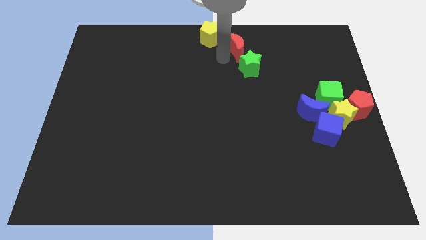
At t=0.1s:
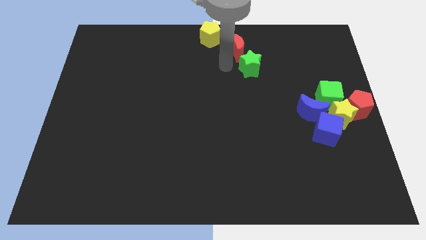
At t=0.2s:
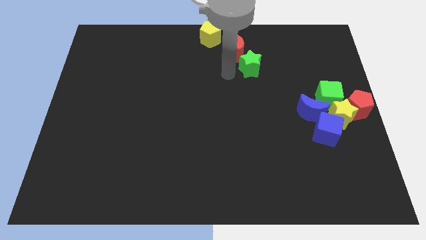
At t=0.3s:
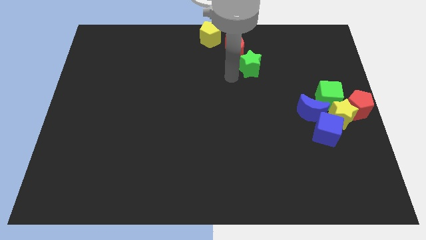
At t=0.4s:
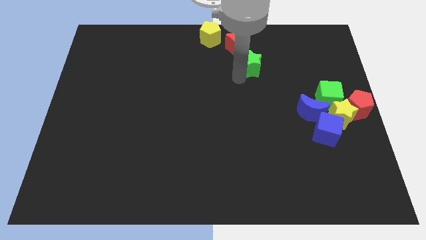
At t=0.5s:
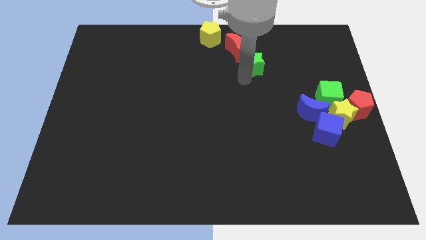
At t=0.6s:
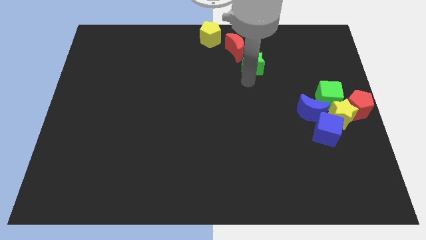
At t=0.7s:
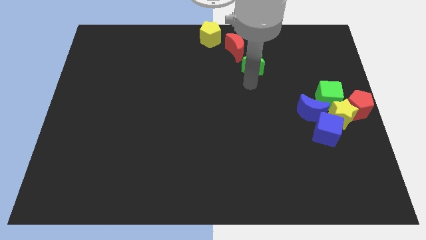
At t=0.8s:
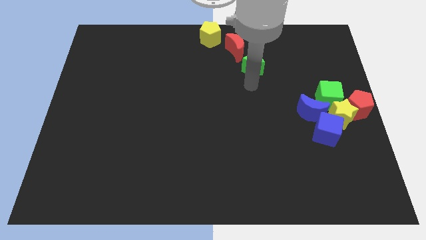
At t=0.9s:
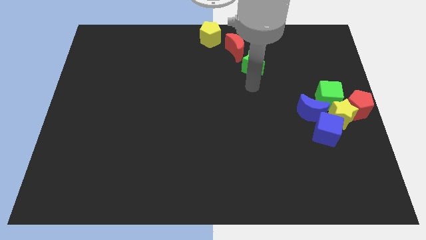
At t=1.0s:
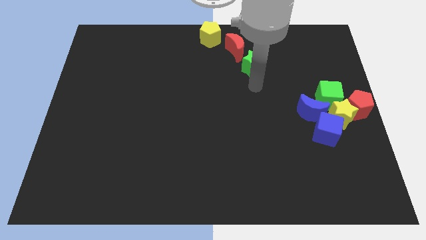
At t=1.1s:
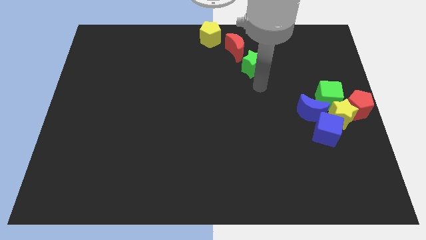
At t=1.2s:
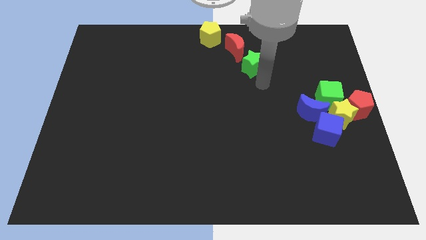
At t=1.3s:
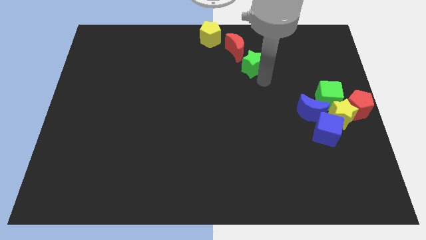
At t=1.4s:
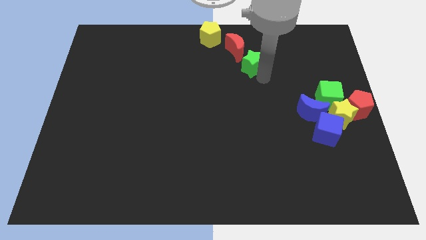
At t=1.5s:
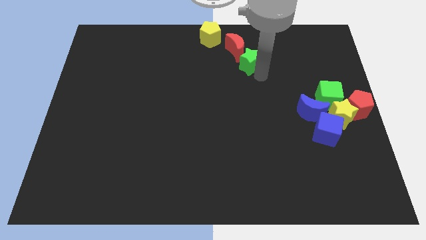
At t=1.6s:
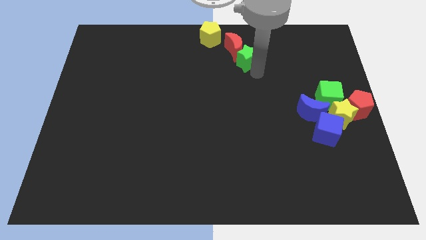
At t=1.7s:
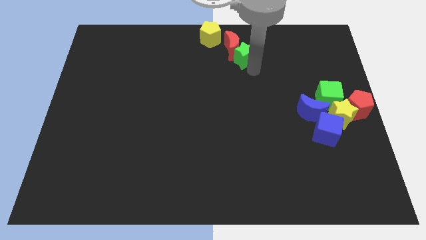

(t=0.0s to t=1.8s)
place the arm below the green star

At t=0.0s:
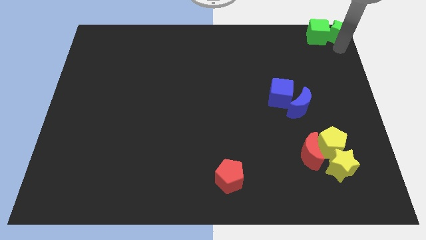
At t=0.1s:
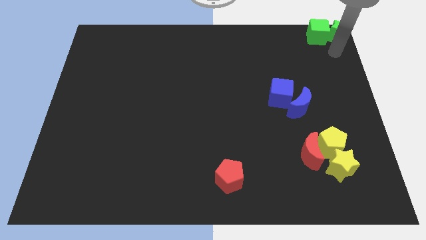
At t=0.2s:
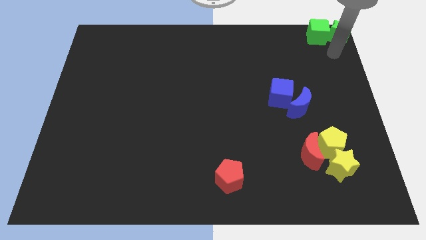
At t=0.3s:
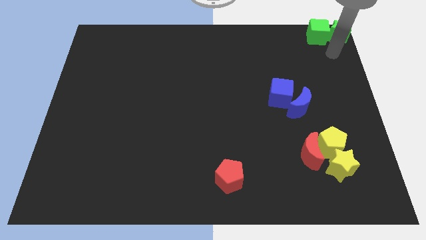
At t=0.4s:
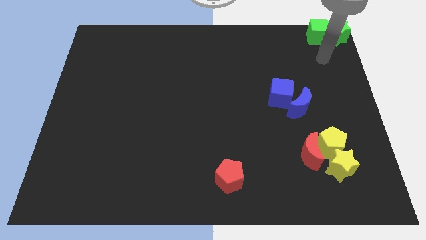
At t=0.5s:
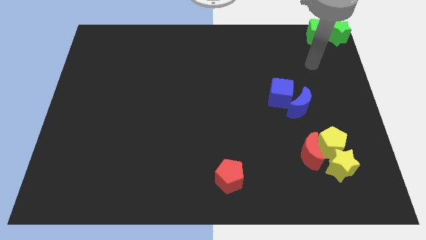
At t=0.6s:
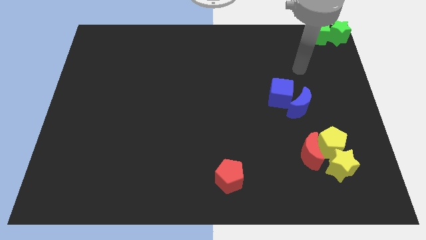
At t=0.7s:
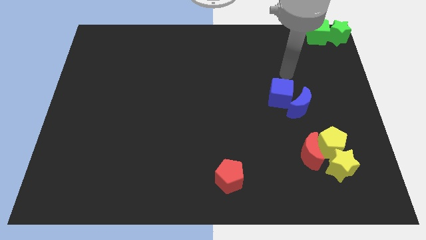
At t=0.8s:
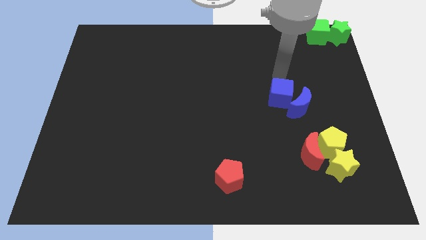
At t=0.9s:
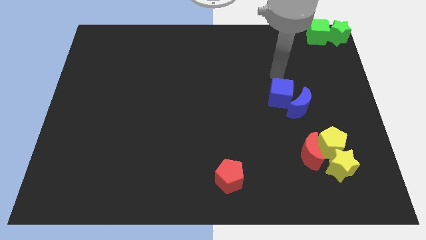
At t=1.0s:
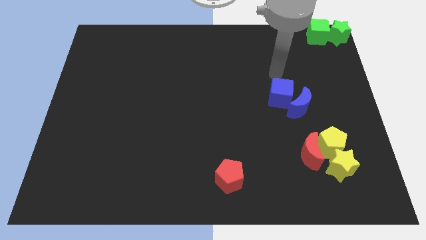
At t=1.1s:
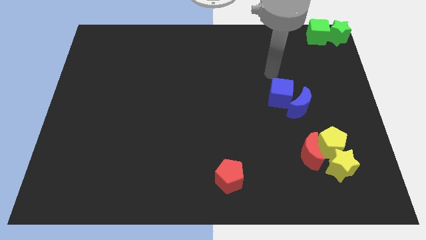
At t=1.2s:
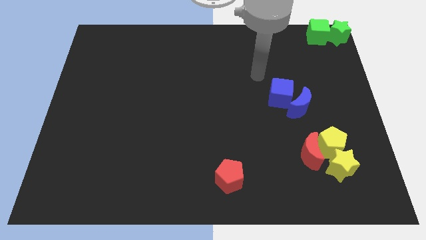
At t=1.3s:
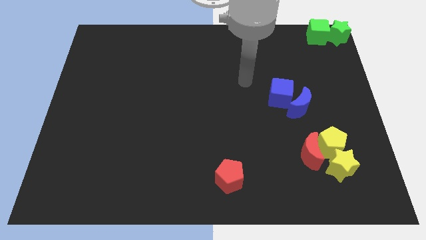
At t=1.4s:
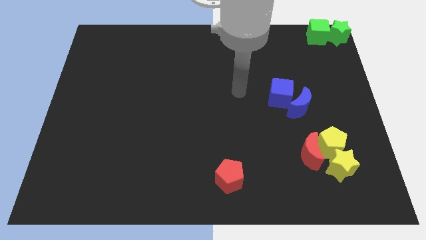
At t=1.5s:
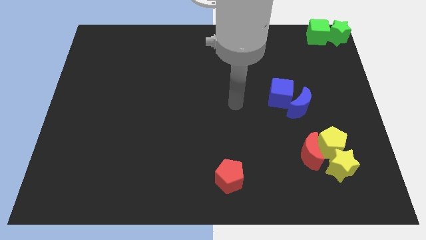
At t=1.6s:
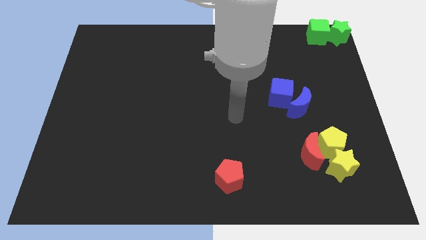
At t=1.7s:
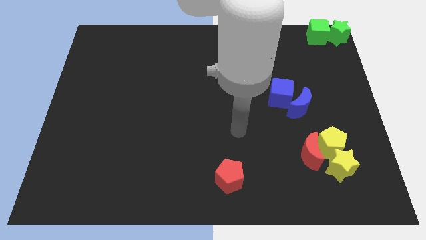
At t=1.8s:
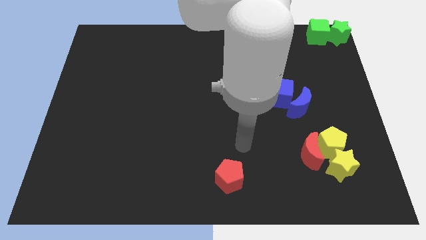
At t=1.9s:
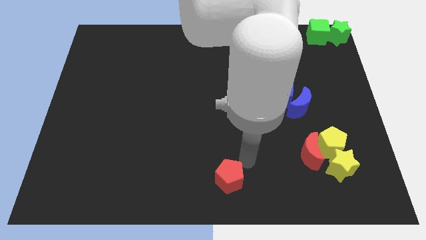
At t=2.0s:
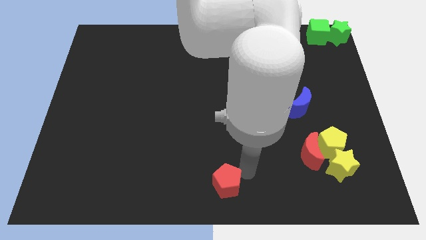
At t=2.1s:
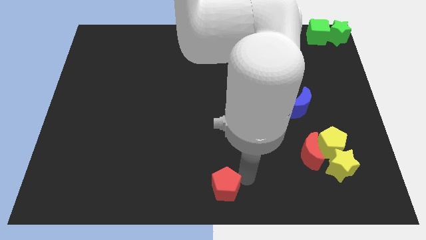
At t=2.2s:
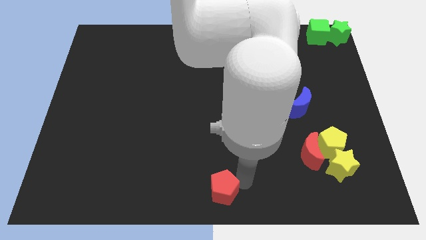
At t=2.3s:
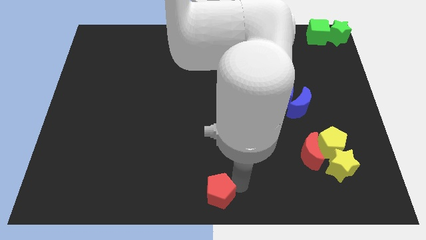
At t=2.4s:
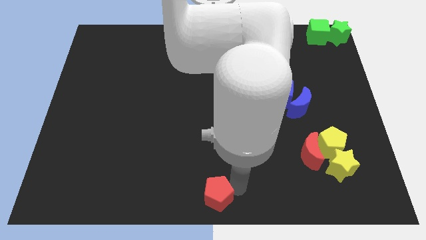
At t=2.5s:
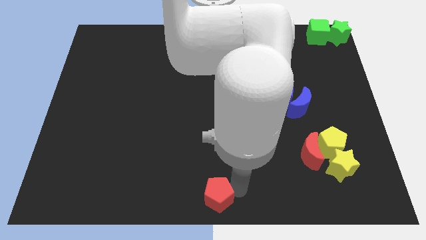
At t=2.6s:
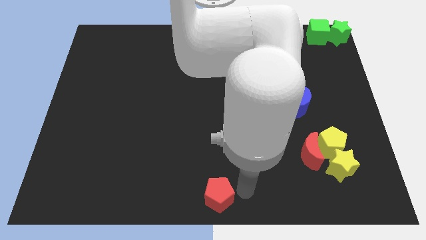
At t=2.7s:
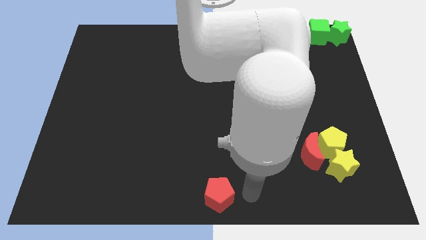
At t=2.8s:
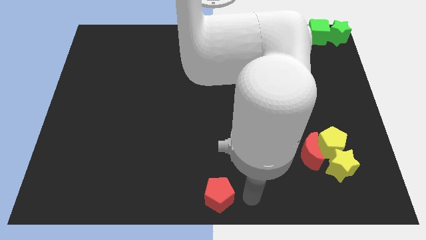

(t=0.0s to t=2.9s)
move the red pentagon to the bottom center of the board

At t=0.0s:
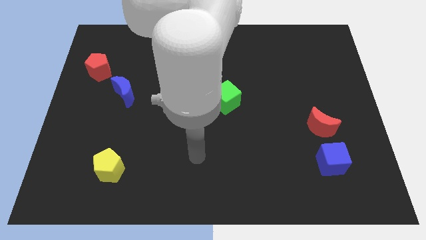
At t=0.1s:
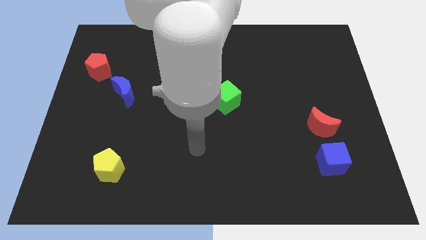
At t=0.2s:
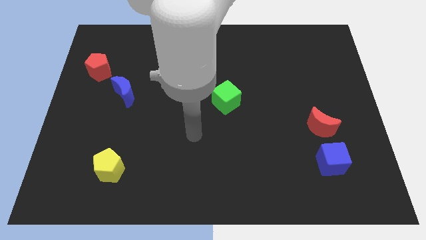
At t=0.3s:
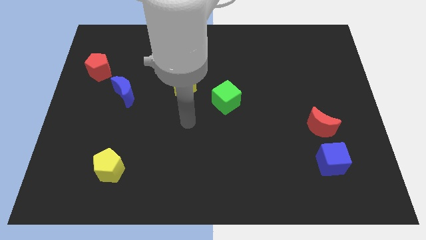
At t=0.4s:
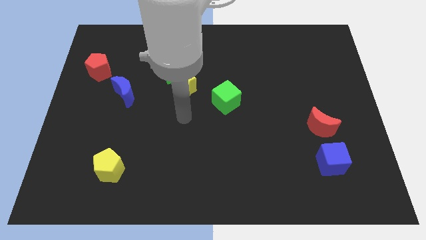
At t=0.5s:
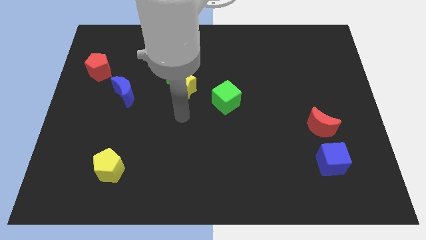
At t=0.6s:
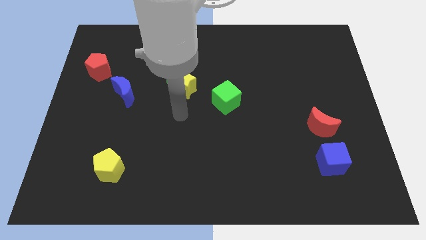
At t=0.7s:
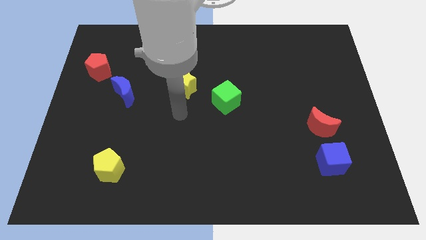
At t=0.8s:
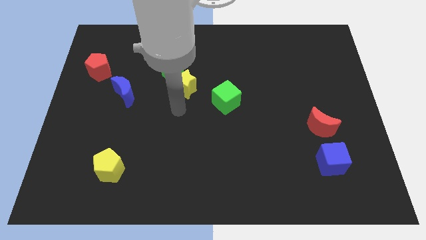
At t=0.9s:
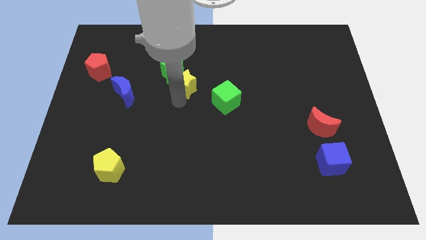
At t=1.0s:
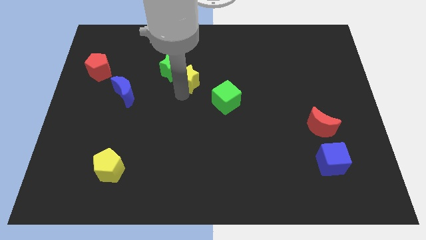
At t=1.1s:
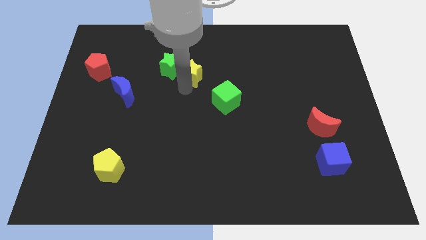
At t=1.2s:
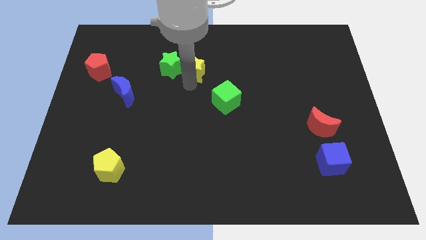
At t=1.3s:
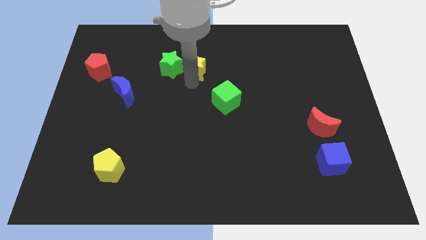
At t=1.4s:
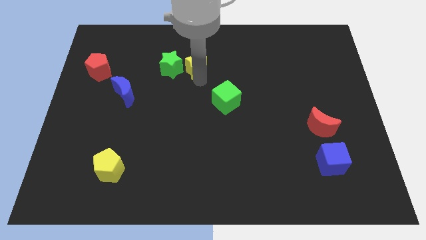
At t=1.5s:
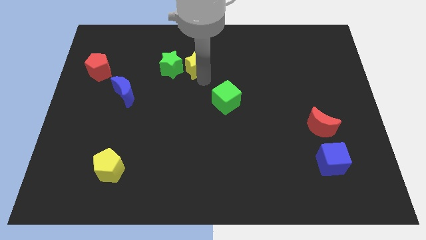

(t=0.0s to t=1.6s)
move the yellow star to the right of the green star

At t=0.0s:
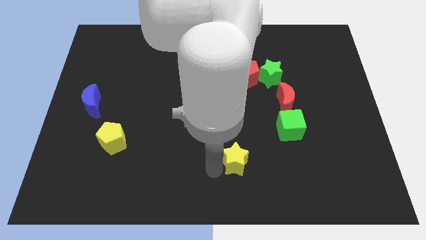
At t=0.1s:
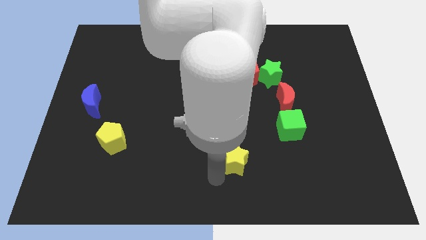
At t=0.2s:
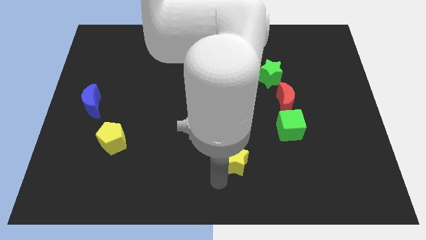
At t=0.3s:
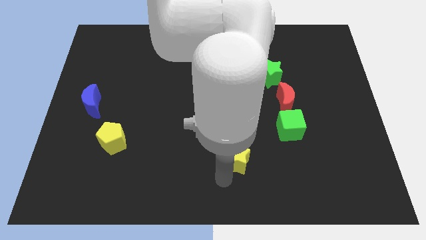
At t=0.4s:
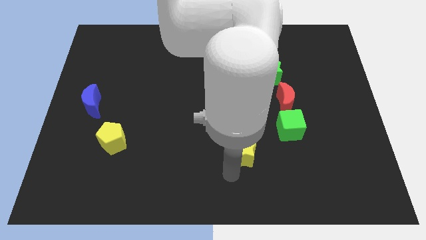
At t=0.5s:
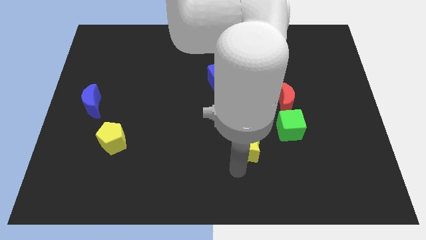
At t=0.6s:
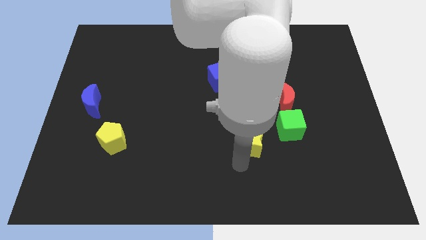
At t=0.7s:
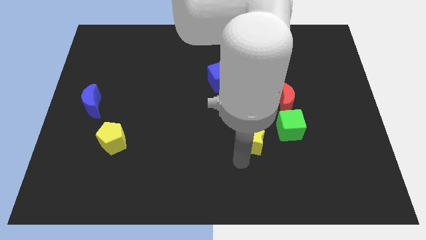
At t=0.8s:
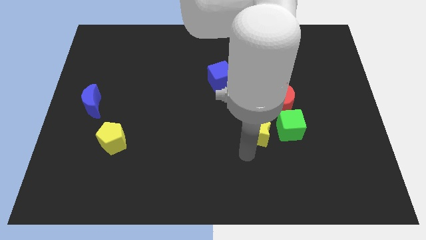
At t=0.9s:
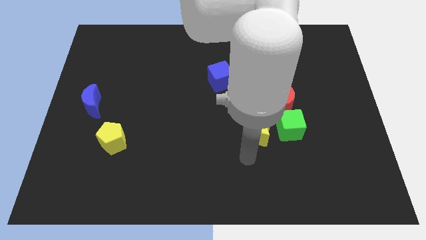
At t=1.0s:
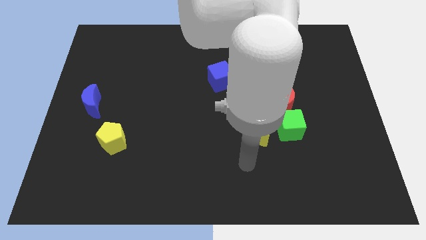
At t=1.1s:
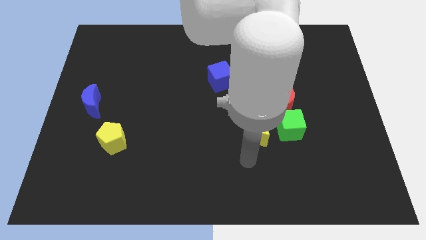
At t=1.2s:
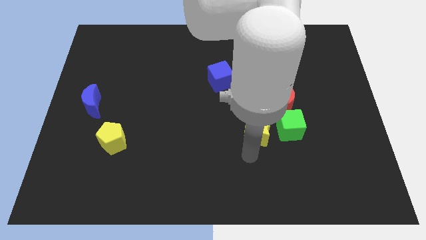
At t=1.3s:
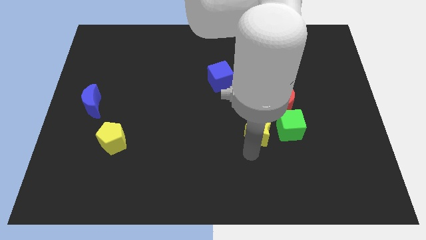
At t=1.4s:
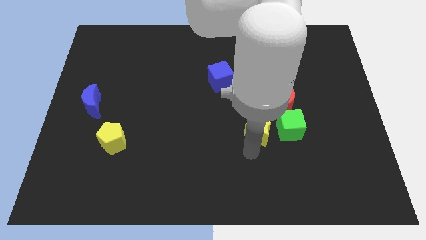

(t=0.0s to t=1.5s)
move the yellow star to the left of green cube

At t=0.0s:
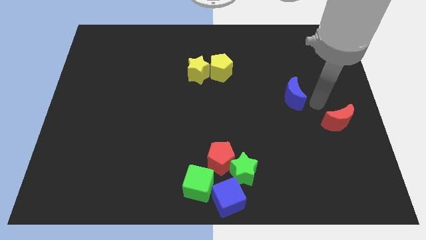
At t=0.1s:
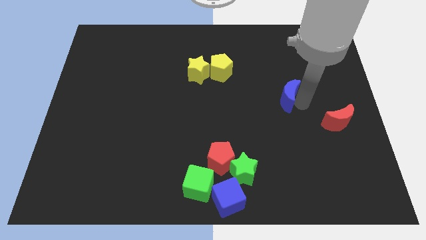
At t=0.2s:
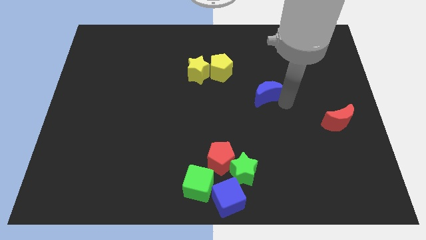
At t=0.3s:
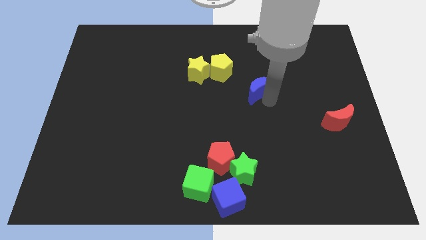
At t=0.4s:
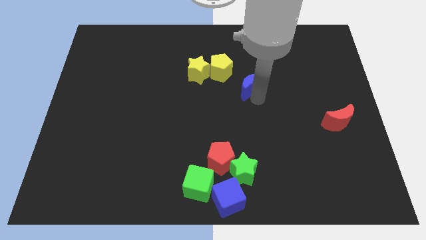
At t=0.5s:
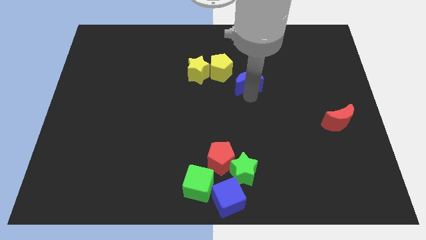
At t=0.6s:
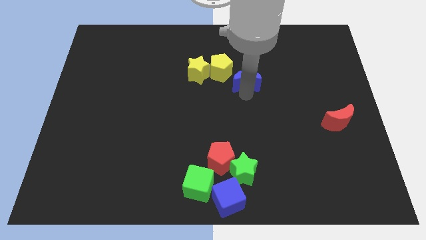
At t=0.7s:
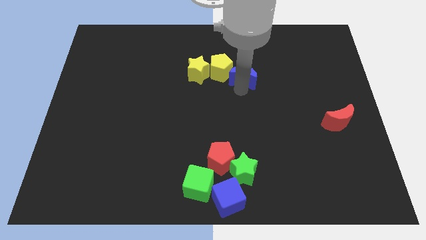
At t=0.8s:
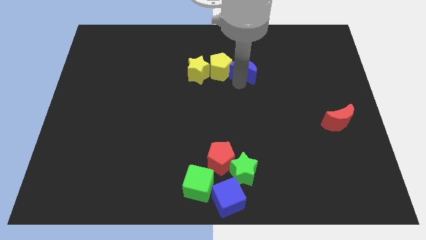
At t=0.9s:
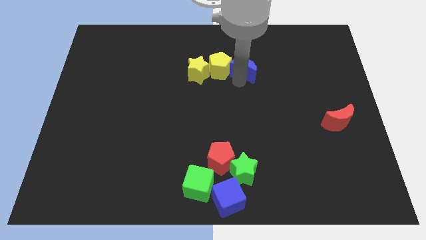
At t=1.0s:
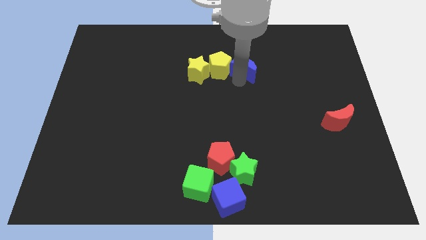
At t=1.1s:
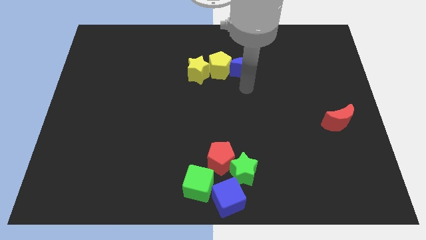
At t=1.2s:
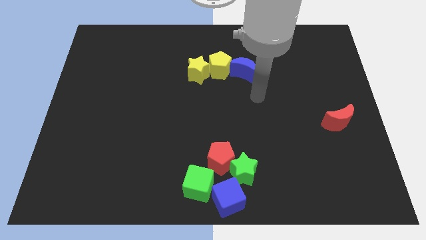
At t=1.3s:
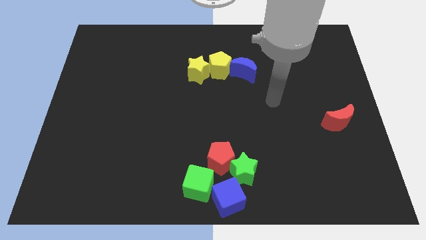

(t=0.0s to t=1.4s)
move the blue crescent to the right side of yellow pentagon
